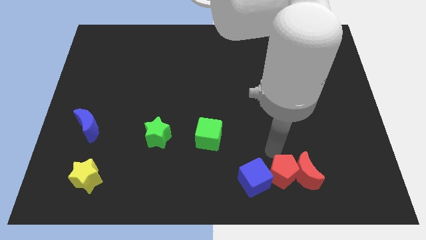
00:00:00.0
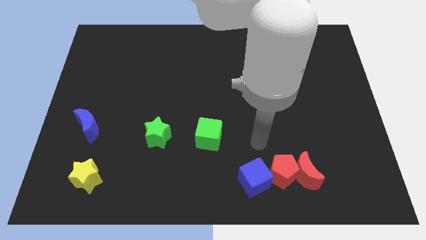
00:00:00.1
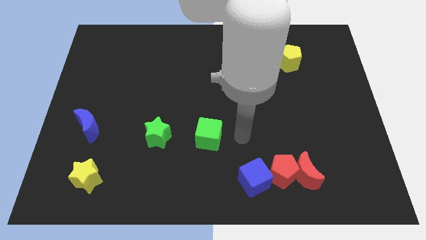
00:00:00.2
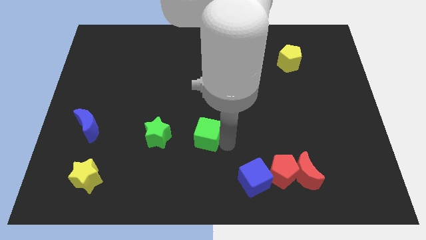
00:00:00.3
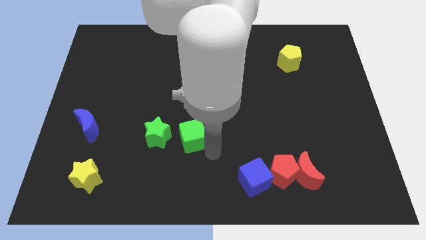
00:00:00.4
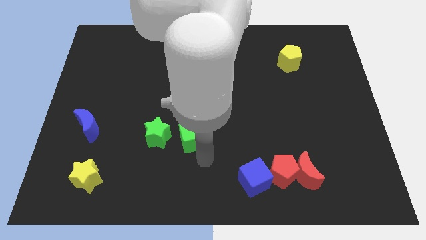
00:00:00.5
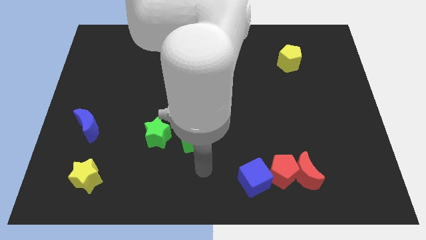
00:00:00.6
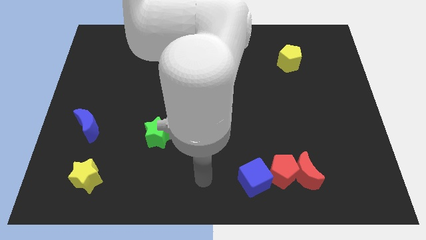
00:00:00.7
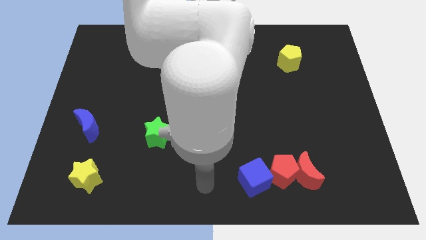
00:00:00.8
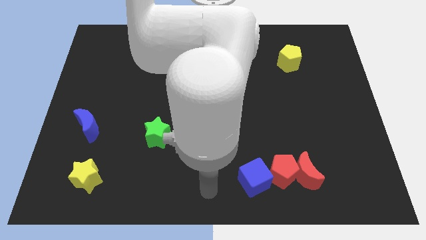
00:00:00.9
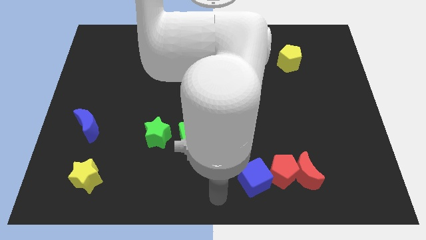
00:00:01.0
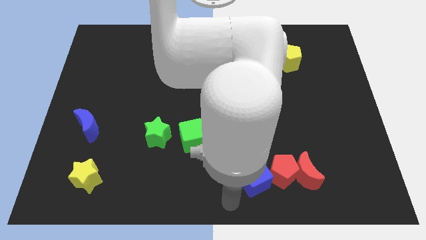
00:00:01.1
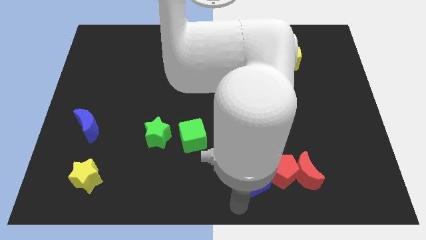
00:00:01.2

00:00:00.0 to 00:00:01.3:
push the green cube slightly towards the green star

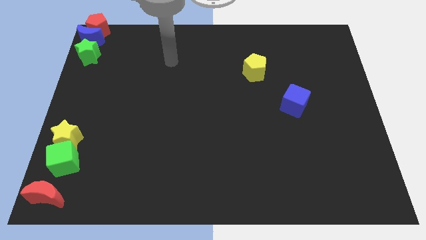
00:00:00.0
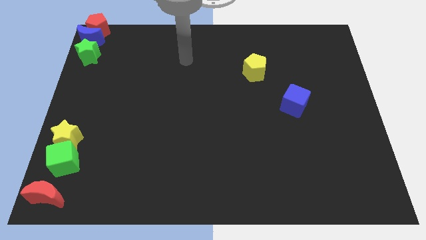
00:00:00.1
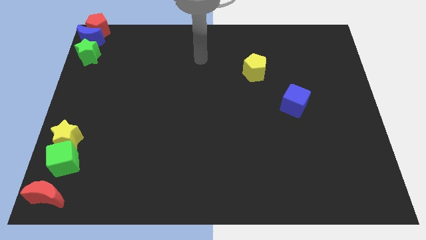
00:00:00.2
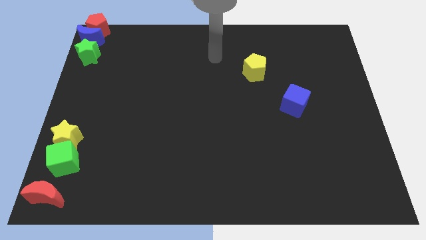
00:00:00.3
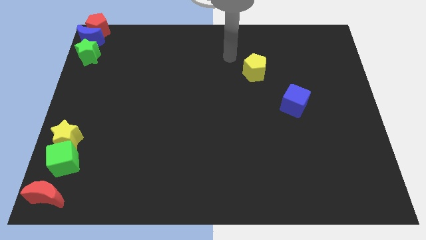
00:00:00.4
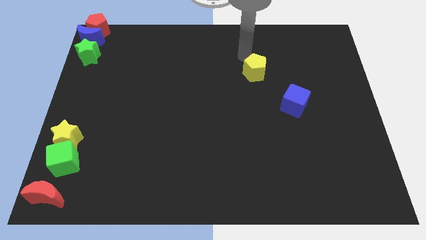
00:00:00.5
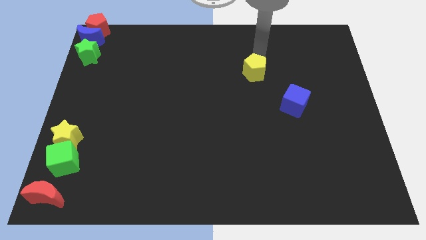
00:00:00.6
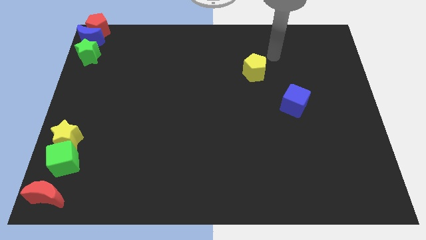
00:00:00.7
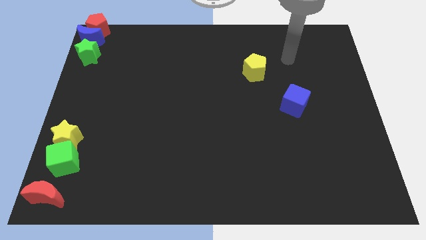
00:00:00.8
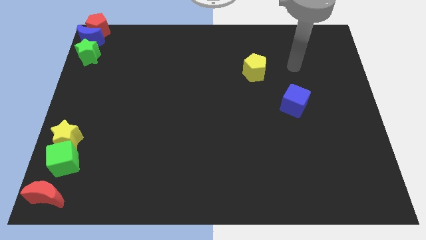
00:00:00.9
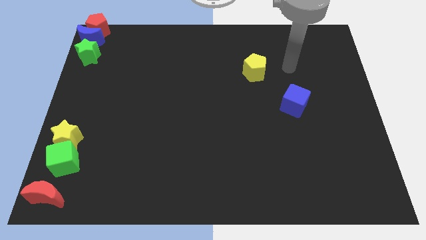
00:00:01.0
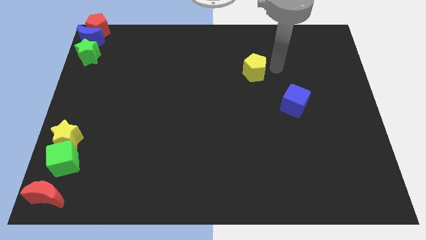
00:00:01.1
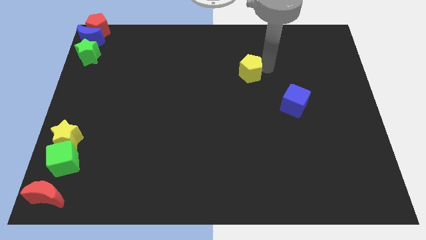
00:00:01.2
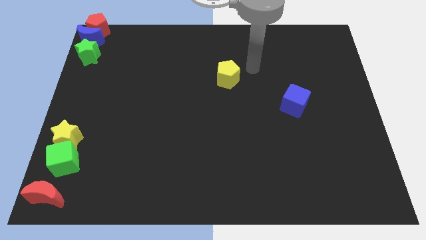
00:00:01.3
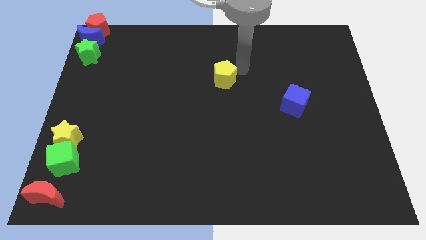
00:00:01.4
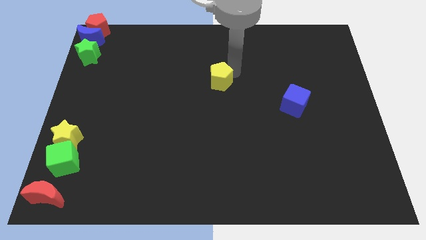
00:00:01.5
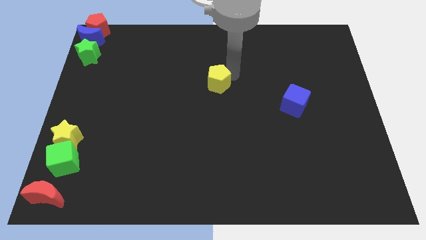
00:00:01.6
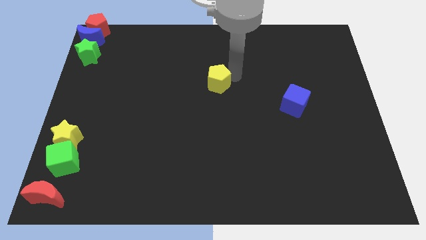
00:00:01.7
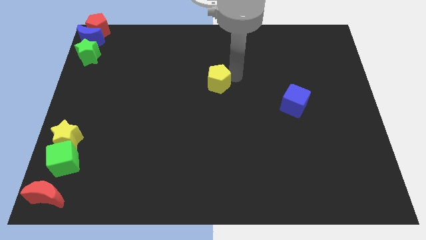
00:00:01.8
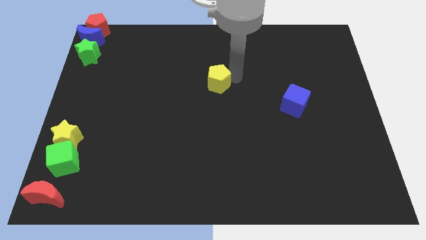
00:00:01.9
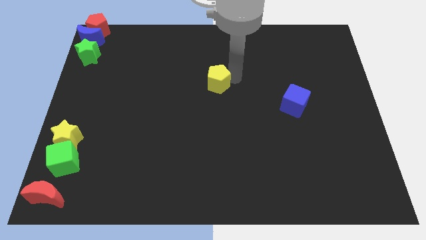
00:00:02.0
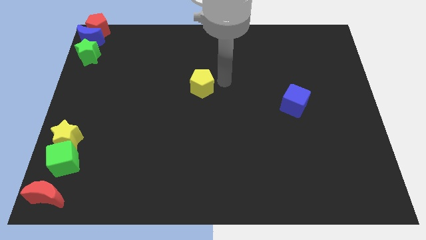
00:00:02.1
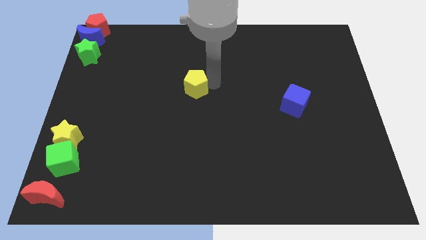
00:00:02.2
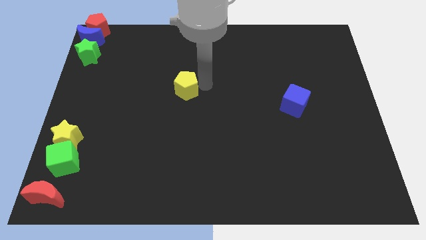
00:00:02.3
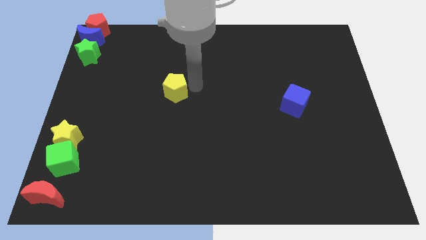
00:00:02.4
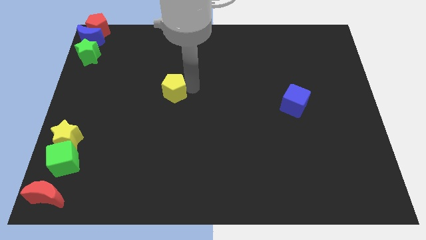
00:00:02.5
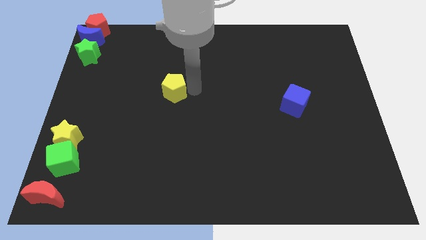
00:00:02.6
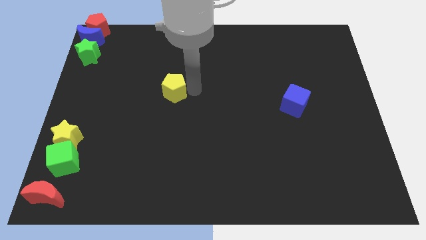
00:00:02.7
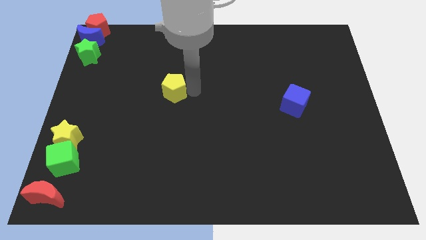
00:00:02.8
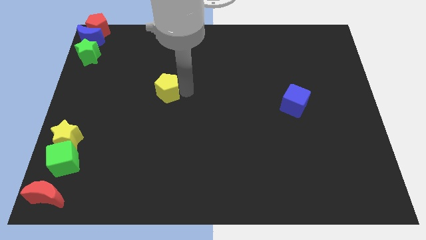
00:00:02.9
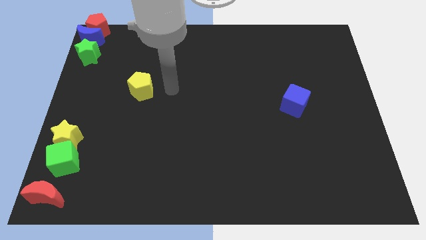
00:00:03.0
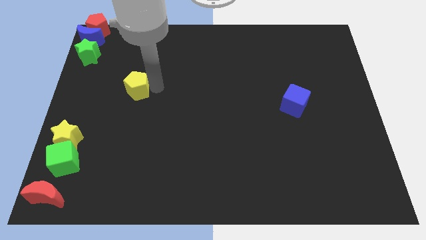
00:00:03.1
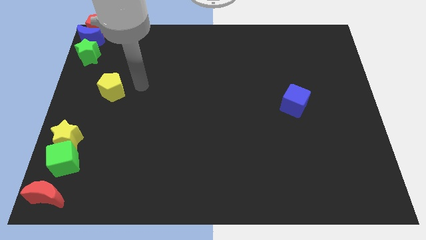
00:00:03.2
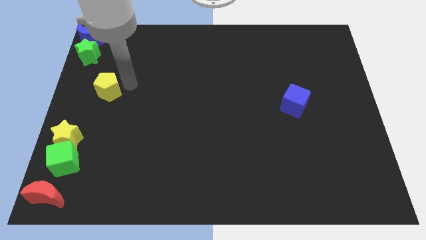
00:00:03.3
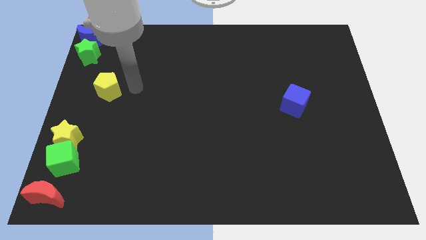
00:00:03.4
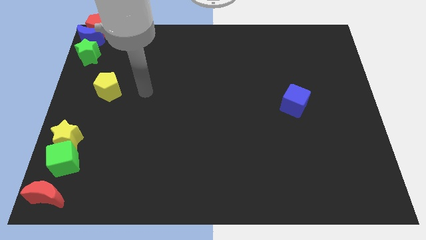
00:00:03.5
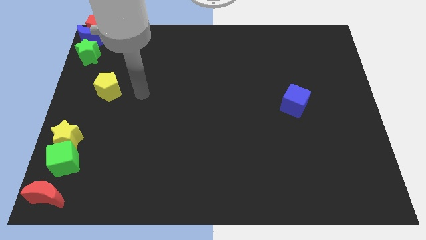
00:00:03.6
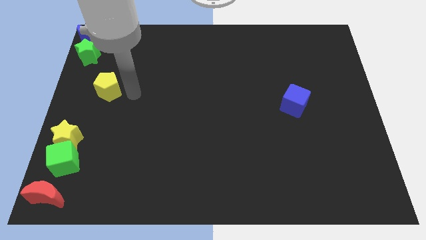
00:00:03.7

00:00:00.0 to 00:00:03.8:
push the yellow pentagon to the left side of the board

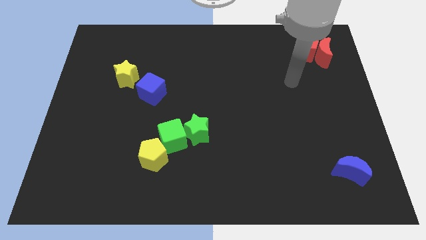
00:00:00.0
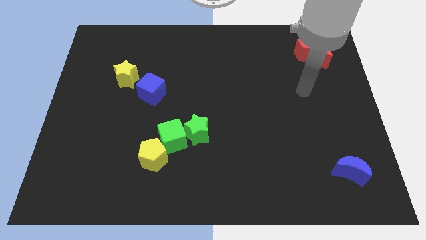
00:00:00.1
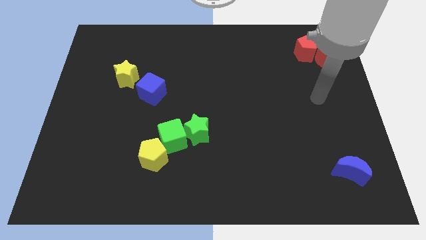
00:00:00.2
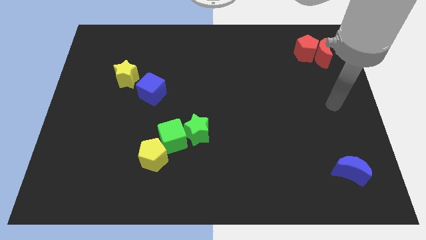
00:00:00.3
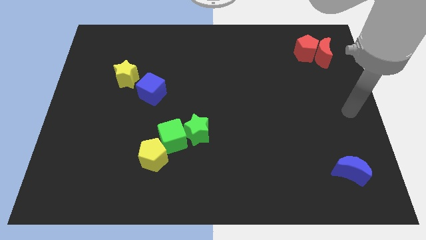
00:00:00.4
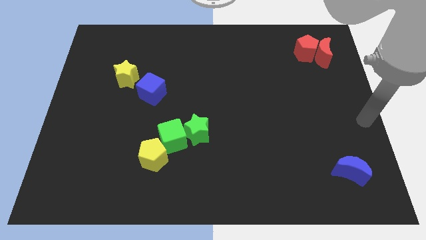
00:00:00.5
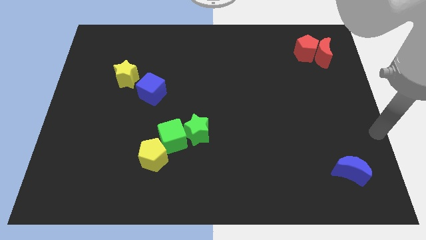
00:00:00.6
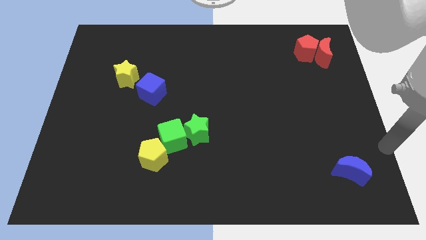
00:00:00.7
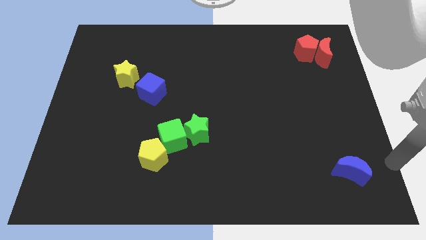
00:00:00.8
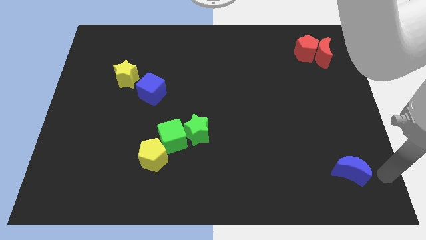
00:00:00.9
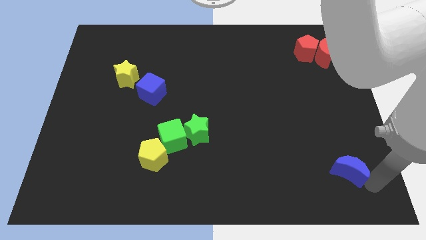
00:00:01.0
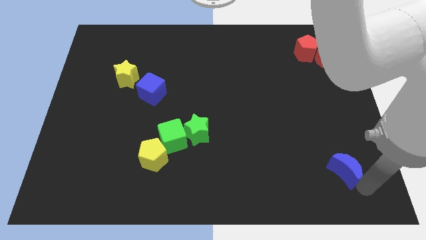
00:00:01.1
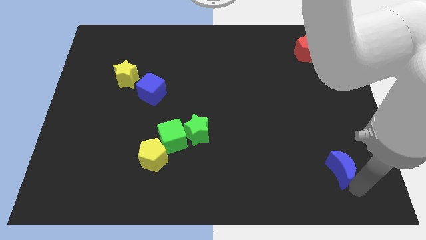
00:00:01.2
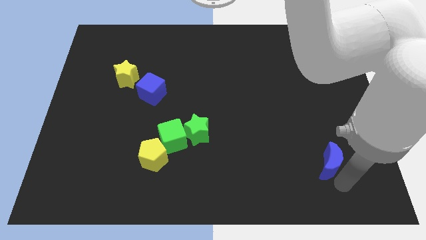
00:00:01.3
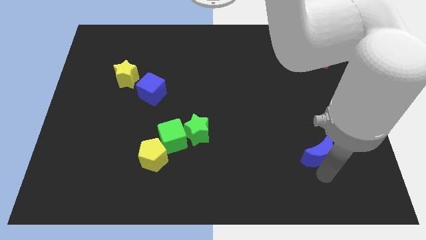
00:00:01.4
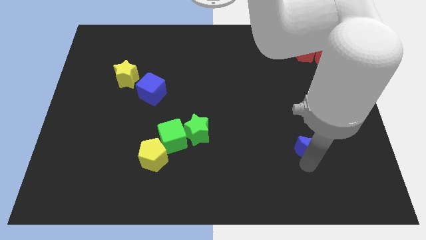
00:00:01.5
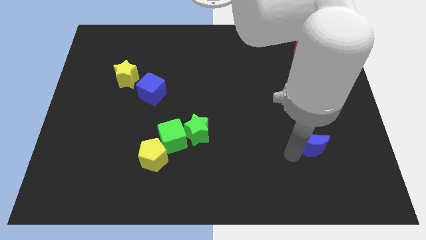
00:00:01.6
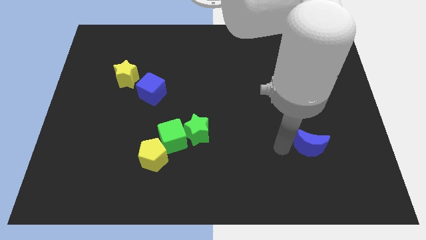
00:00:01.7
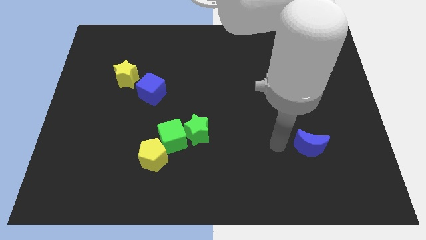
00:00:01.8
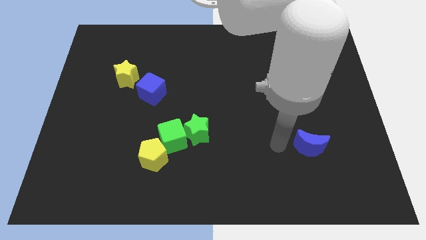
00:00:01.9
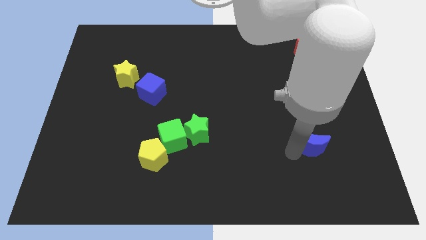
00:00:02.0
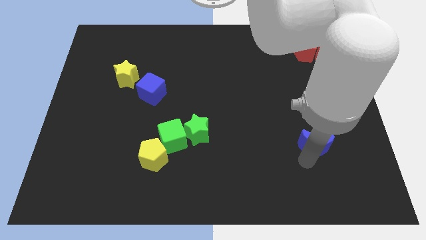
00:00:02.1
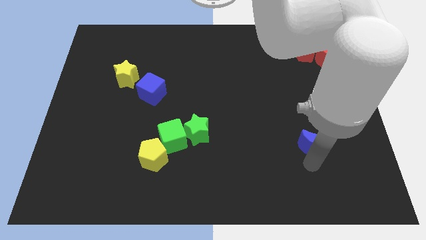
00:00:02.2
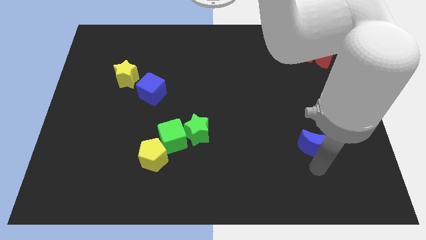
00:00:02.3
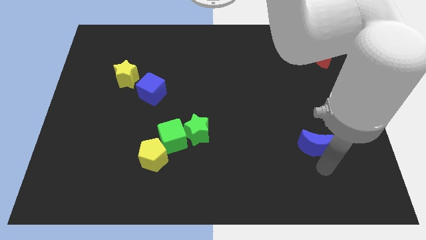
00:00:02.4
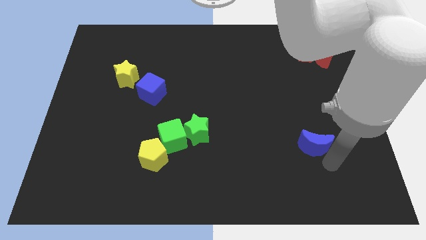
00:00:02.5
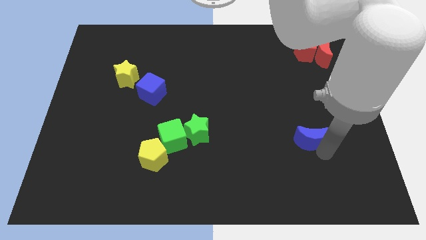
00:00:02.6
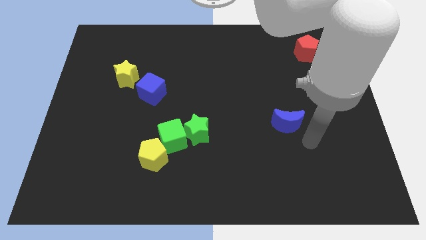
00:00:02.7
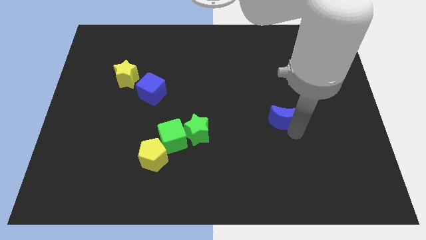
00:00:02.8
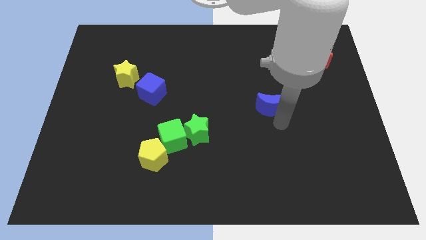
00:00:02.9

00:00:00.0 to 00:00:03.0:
place the blue moon right to the green star

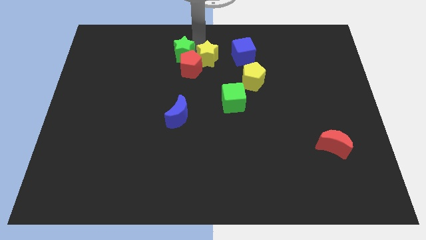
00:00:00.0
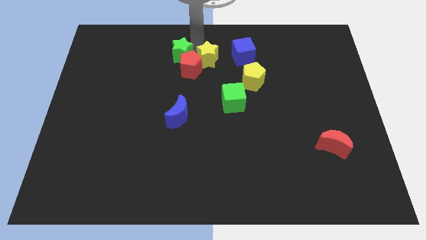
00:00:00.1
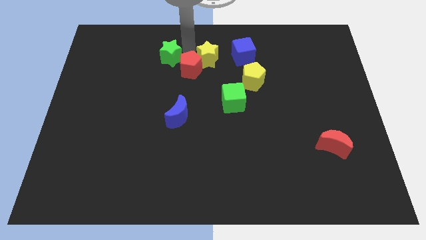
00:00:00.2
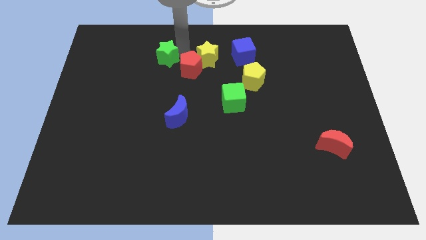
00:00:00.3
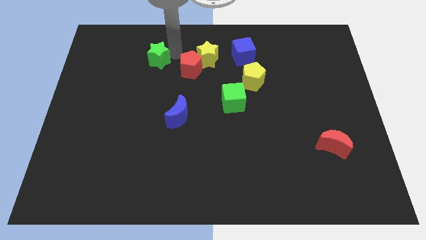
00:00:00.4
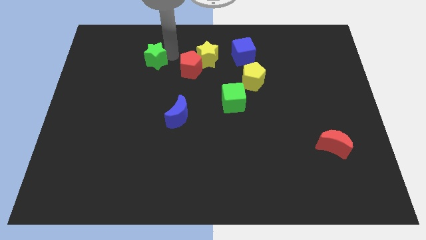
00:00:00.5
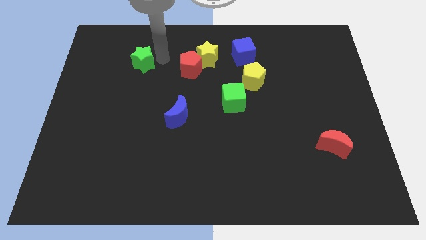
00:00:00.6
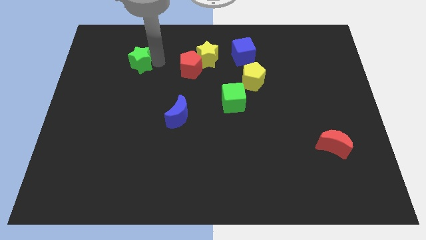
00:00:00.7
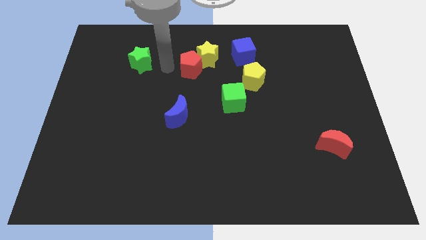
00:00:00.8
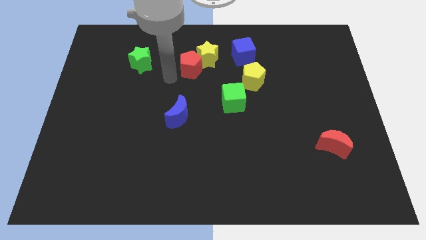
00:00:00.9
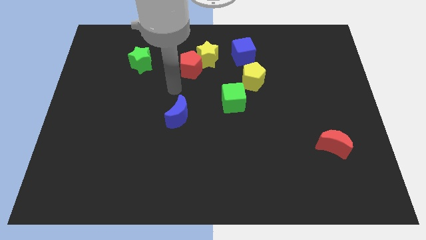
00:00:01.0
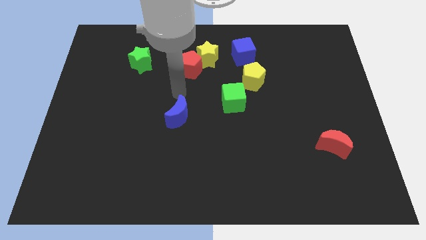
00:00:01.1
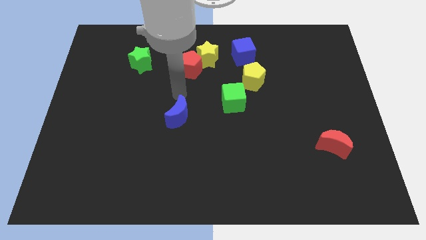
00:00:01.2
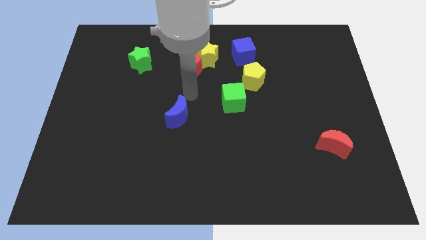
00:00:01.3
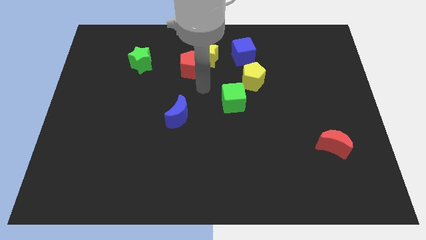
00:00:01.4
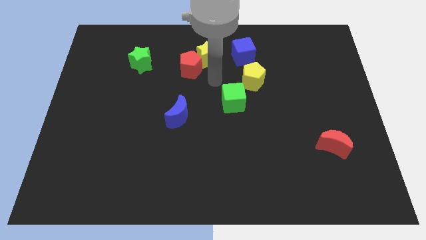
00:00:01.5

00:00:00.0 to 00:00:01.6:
separate green star from the yellow star
